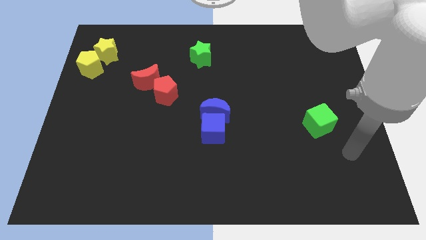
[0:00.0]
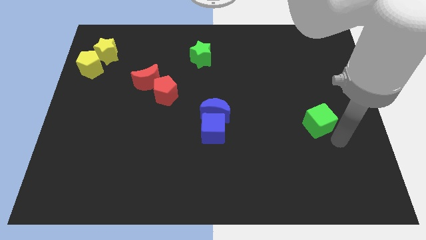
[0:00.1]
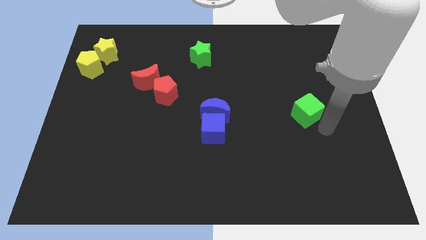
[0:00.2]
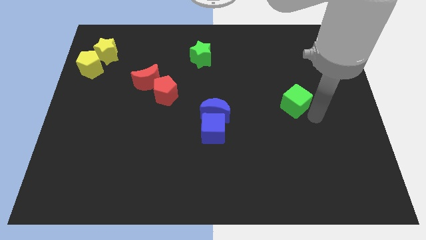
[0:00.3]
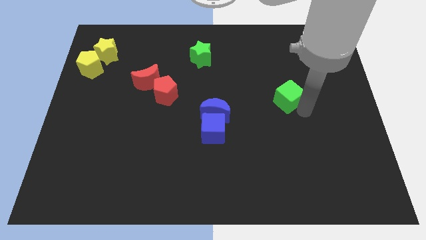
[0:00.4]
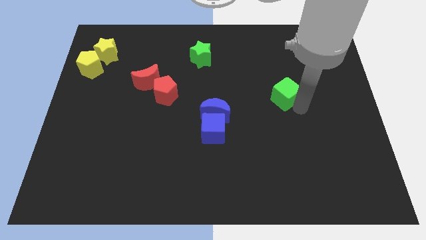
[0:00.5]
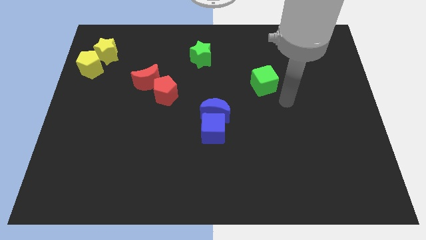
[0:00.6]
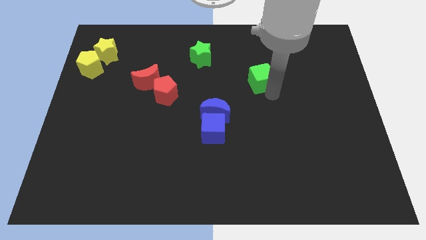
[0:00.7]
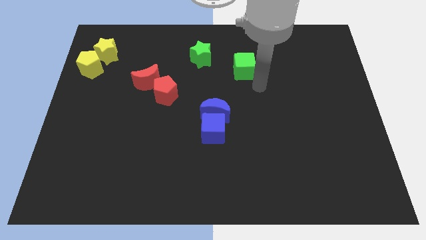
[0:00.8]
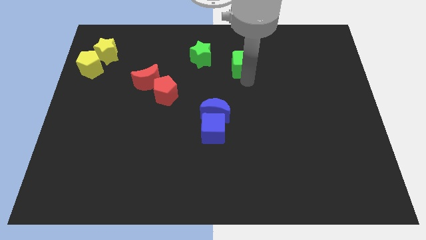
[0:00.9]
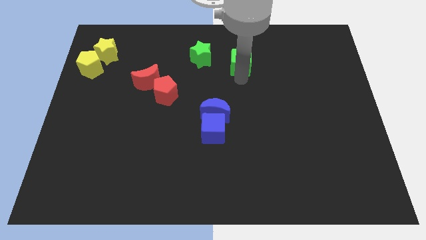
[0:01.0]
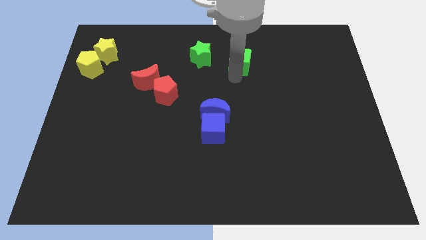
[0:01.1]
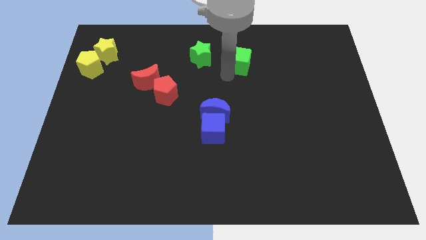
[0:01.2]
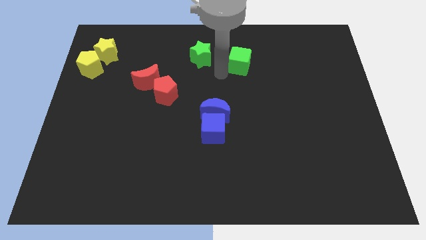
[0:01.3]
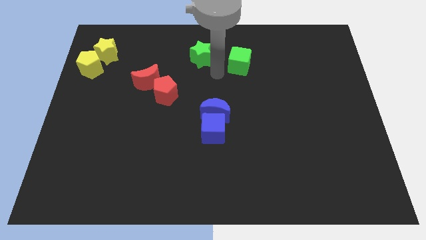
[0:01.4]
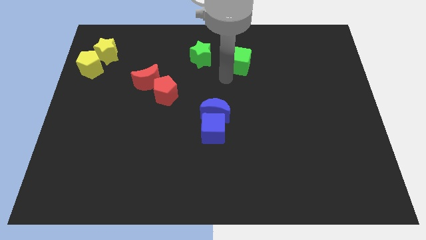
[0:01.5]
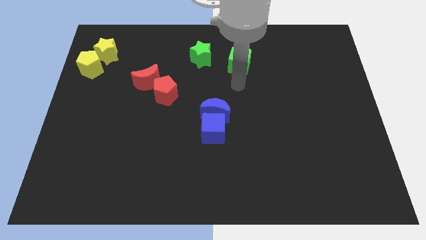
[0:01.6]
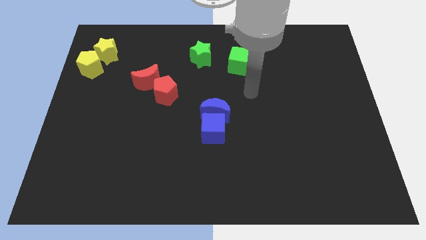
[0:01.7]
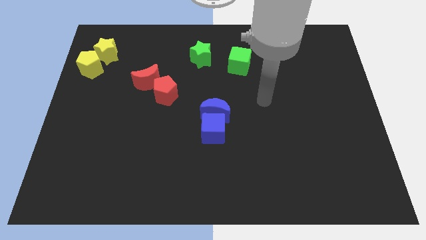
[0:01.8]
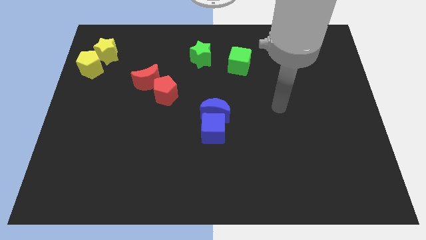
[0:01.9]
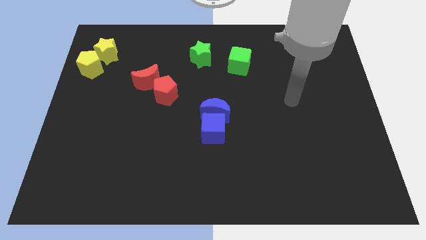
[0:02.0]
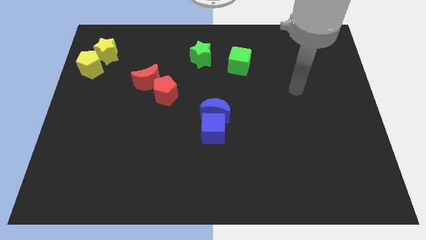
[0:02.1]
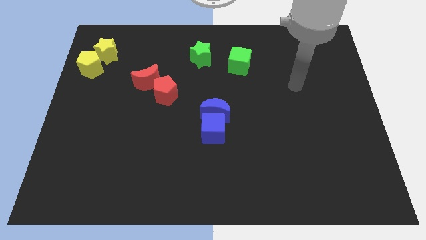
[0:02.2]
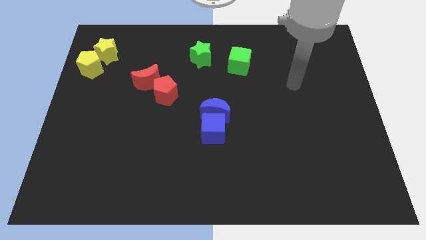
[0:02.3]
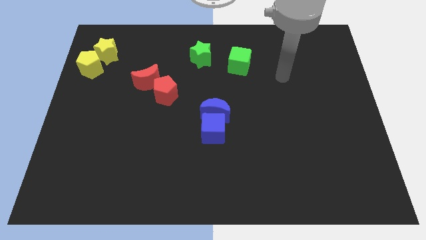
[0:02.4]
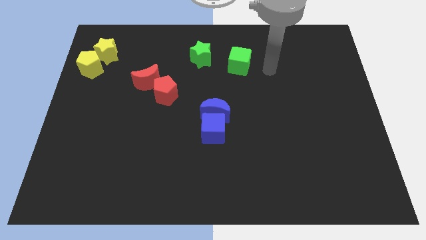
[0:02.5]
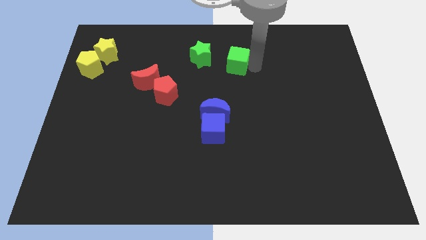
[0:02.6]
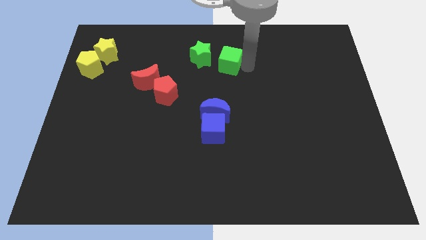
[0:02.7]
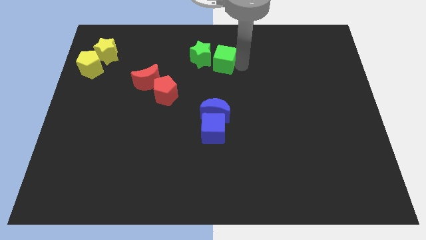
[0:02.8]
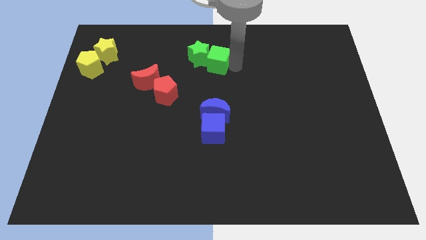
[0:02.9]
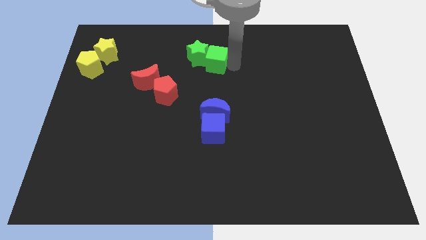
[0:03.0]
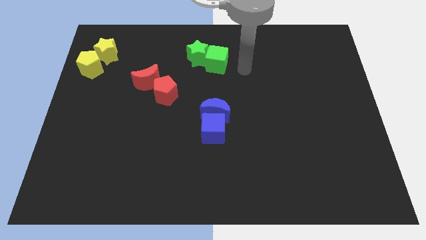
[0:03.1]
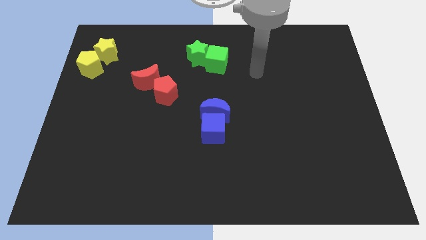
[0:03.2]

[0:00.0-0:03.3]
slide the green cube into the green star

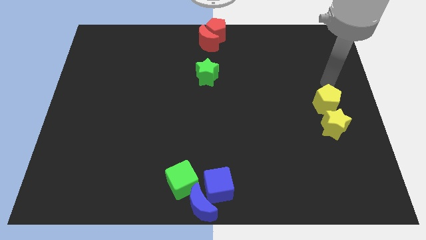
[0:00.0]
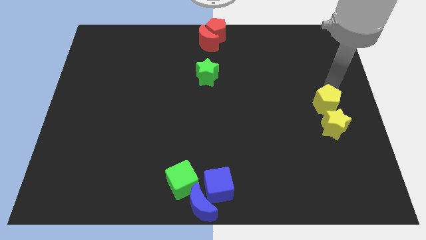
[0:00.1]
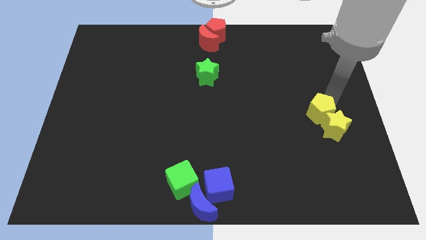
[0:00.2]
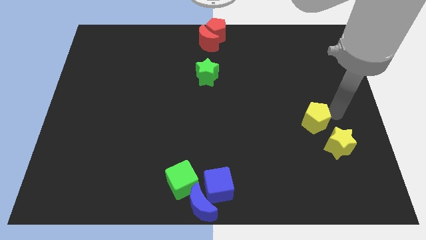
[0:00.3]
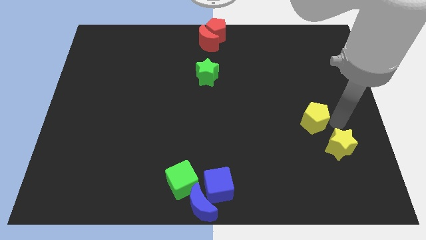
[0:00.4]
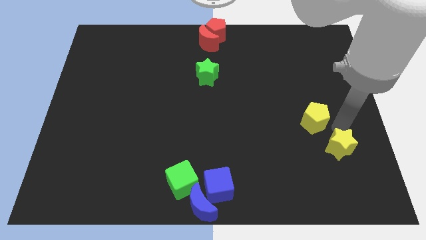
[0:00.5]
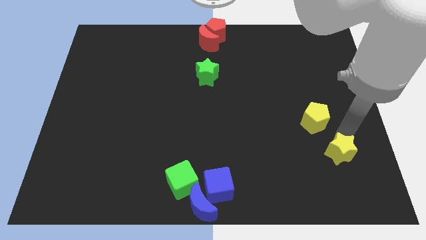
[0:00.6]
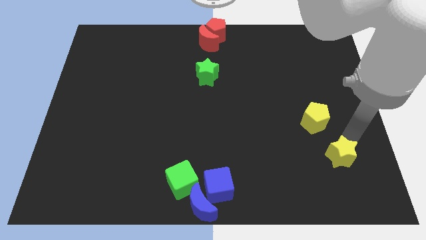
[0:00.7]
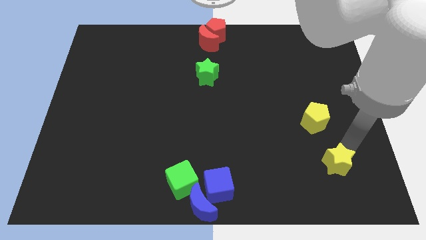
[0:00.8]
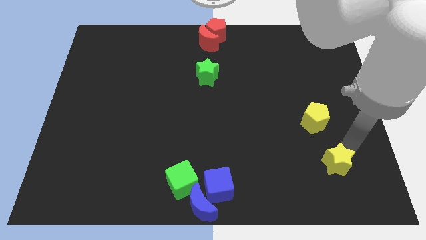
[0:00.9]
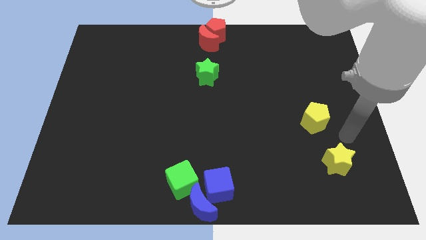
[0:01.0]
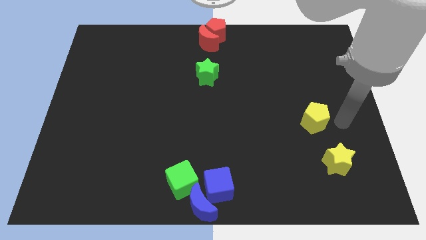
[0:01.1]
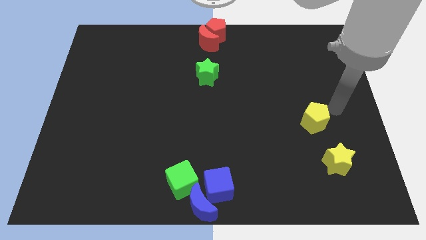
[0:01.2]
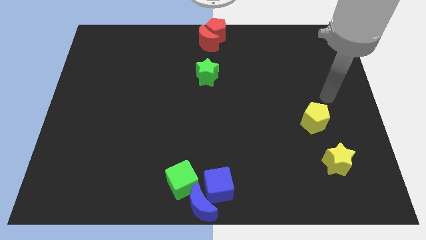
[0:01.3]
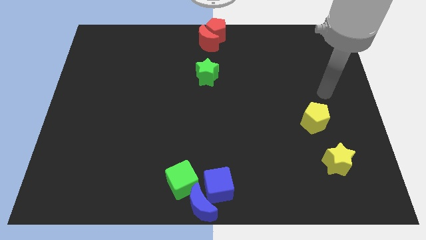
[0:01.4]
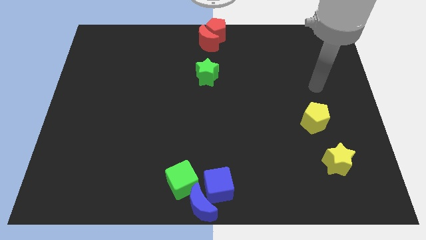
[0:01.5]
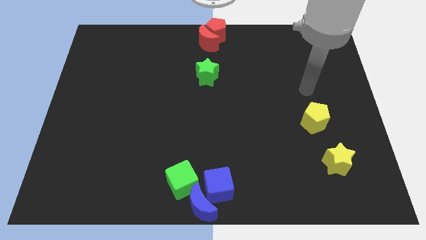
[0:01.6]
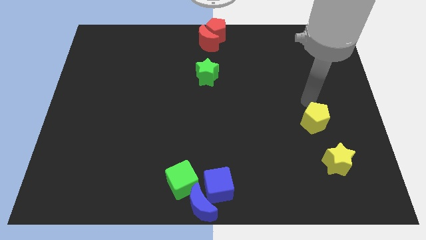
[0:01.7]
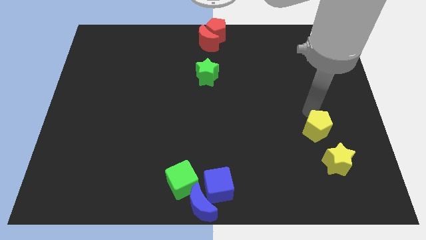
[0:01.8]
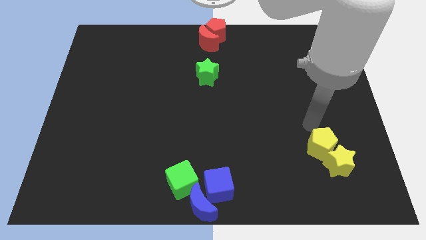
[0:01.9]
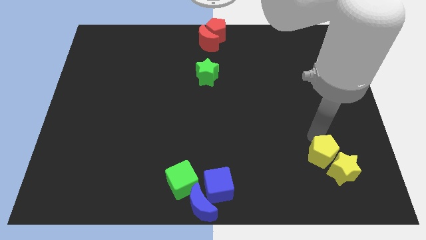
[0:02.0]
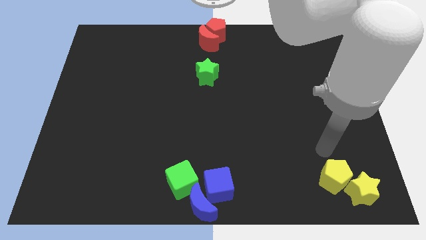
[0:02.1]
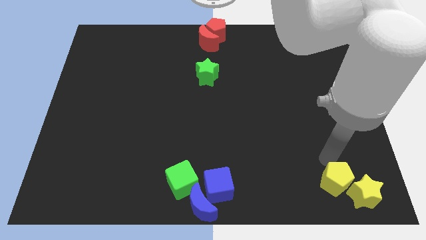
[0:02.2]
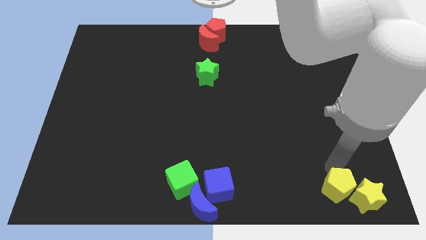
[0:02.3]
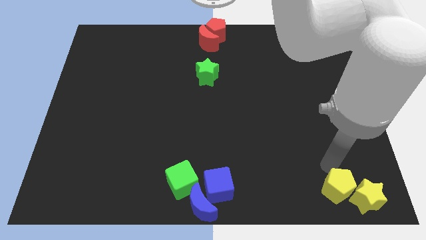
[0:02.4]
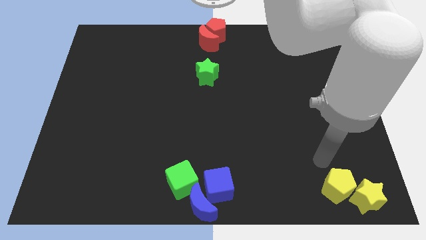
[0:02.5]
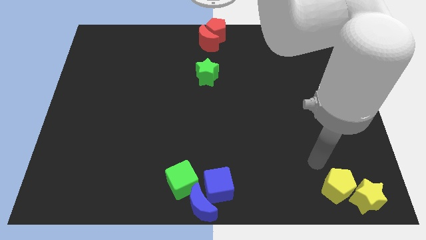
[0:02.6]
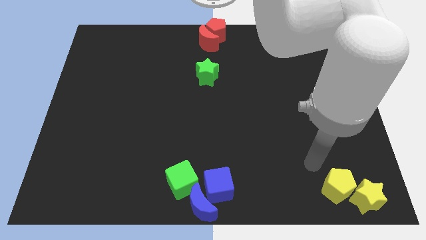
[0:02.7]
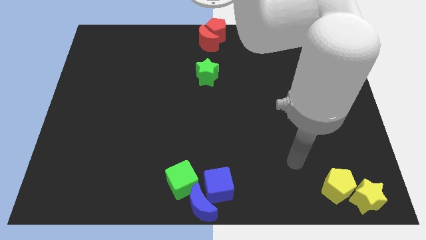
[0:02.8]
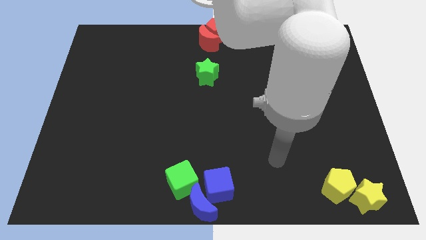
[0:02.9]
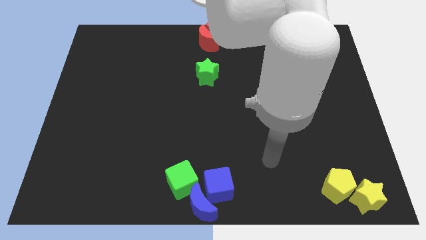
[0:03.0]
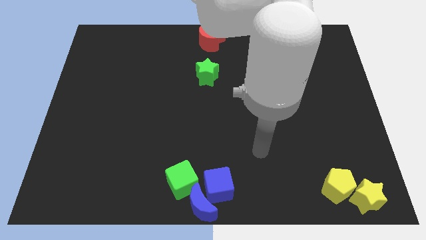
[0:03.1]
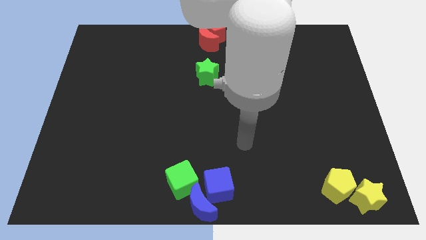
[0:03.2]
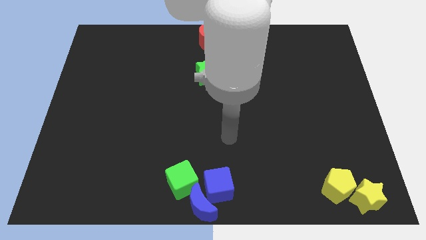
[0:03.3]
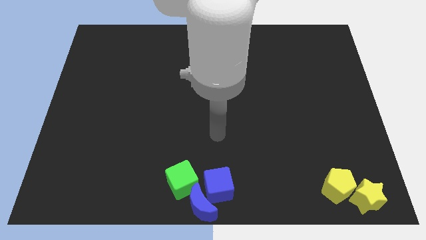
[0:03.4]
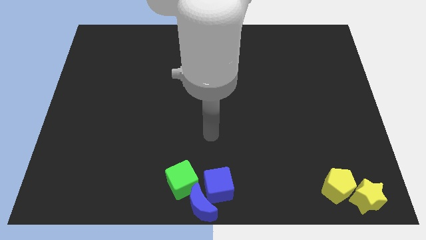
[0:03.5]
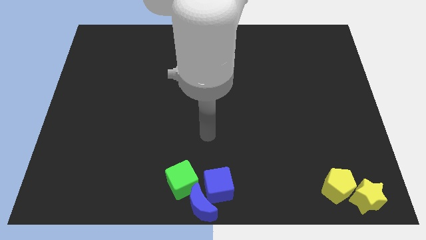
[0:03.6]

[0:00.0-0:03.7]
move the yellow blocks to the bottom right corner of the board

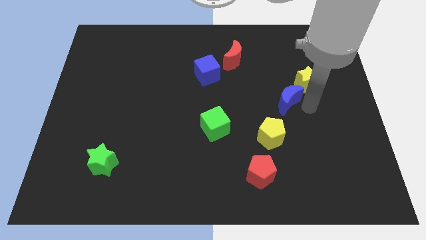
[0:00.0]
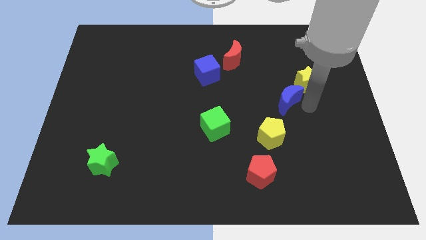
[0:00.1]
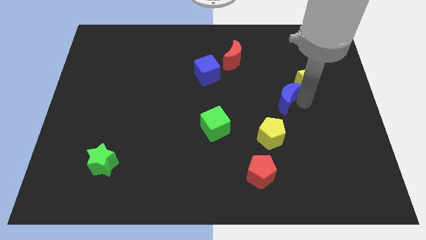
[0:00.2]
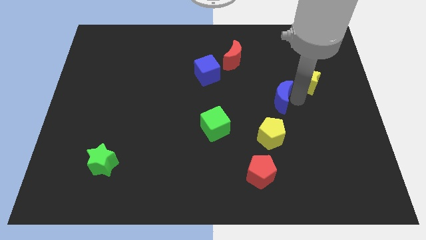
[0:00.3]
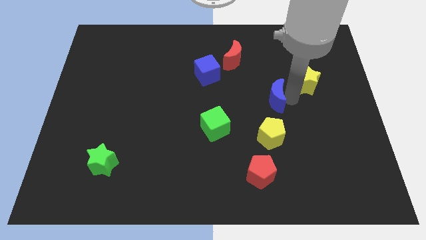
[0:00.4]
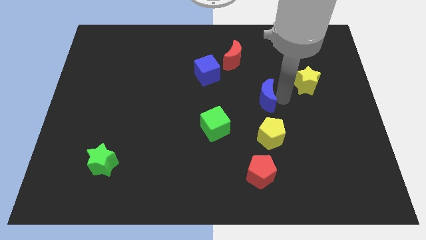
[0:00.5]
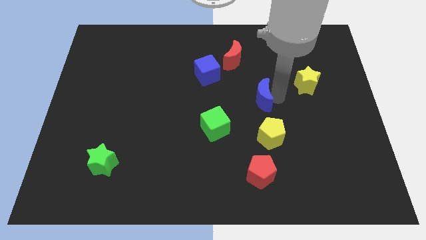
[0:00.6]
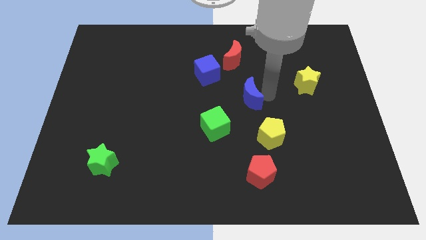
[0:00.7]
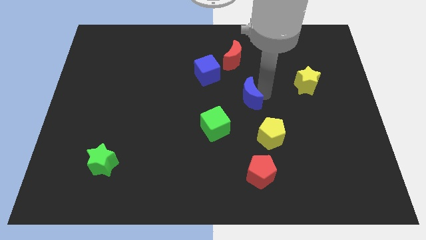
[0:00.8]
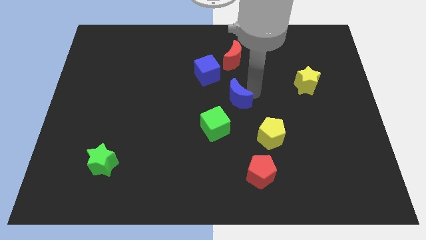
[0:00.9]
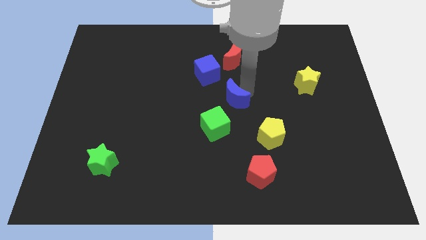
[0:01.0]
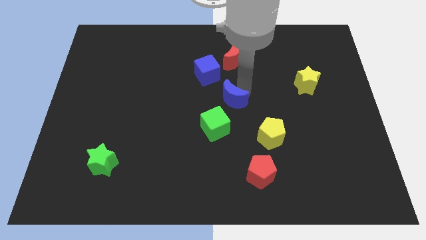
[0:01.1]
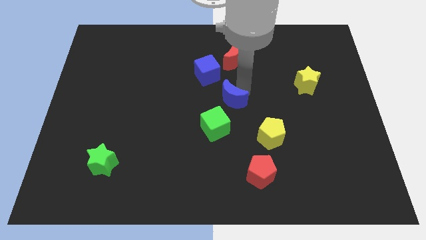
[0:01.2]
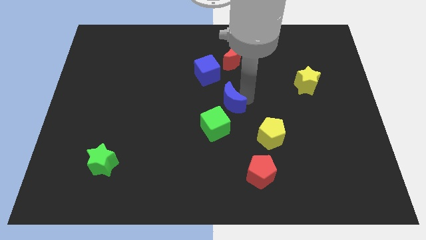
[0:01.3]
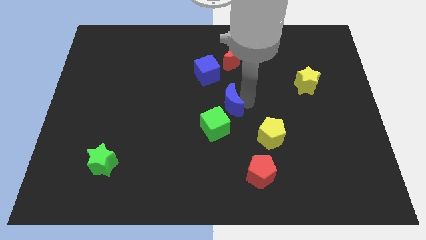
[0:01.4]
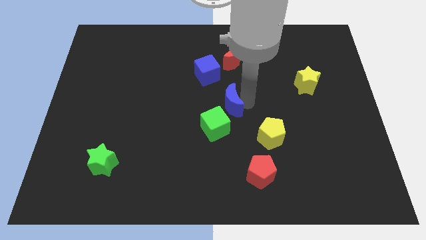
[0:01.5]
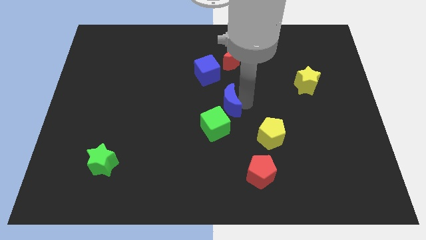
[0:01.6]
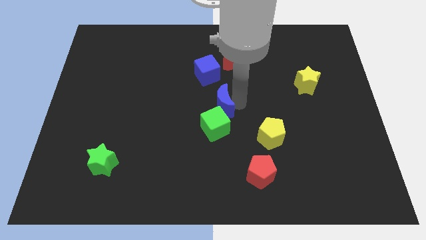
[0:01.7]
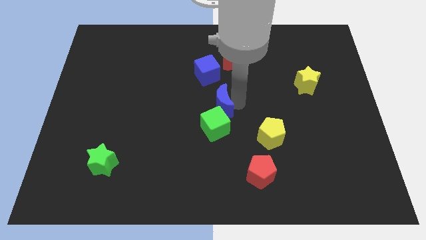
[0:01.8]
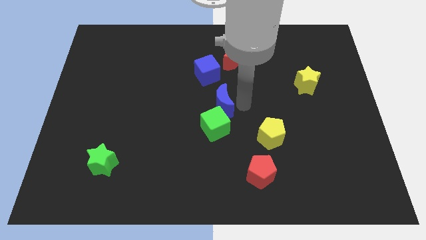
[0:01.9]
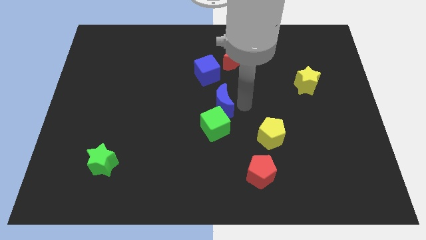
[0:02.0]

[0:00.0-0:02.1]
move blue moon into green cube
